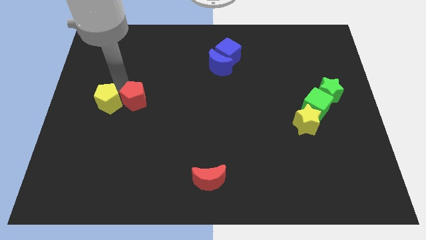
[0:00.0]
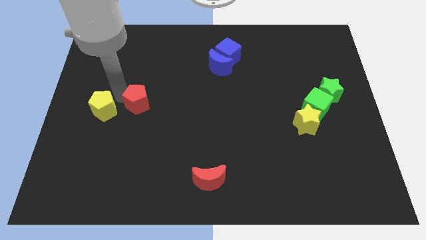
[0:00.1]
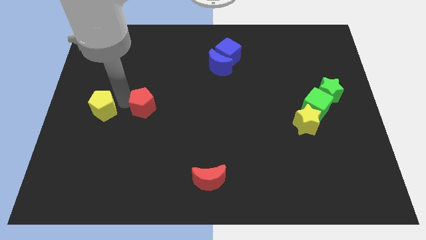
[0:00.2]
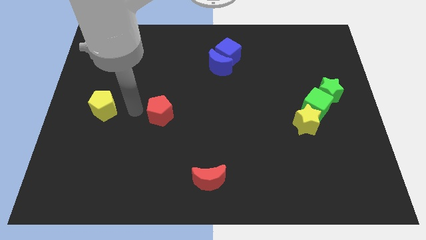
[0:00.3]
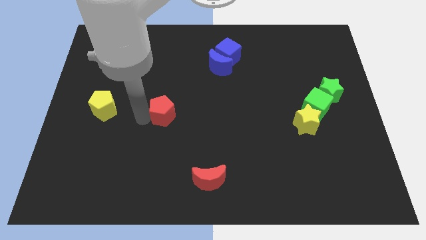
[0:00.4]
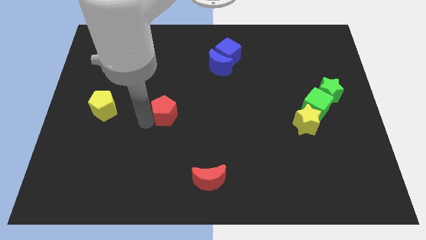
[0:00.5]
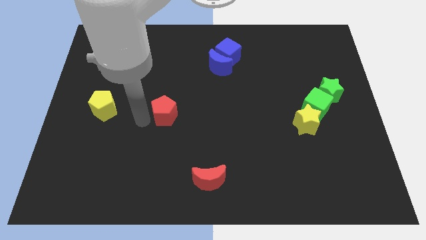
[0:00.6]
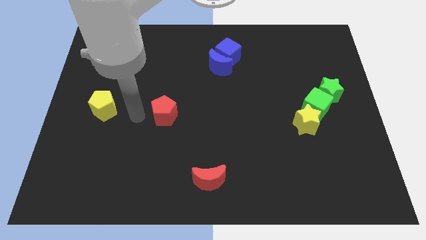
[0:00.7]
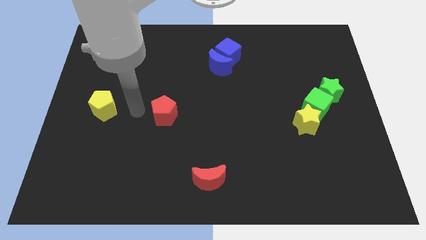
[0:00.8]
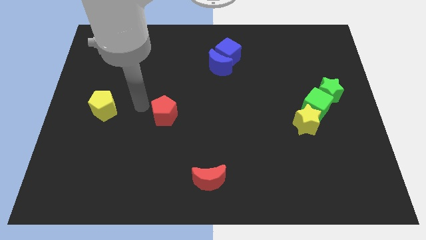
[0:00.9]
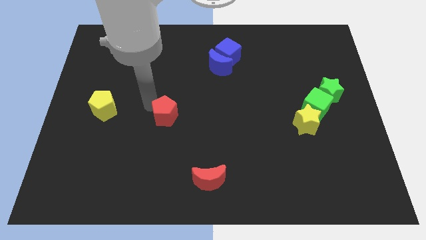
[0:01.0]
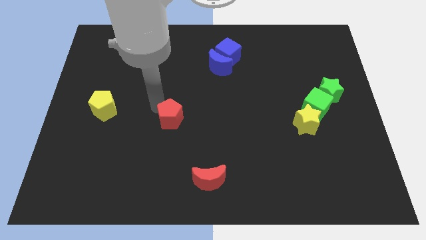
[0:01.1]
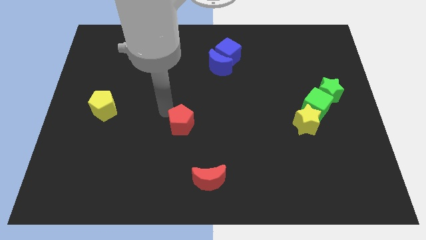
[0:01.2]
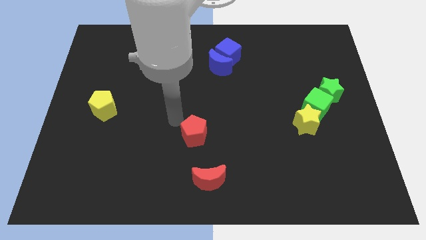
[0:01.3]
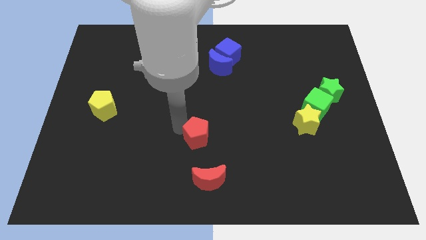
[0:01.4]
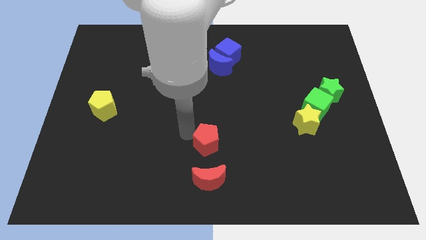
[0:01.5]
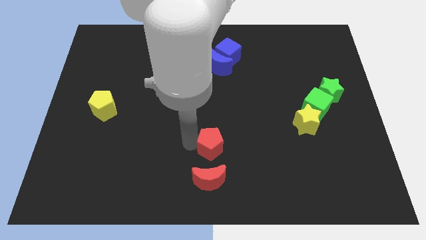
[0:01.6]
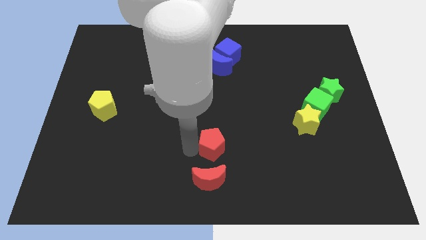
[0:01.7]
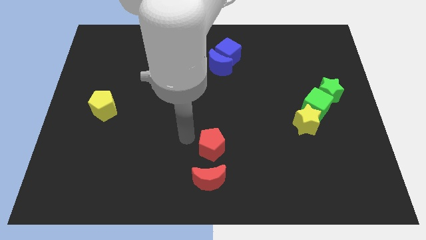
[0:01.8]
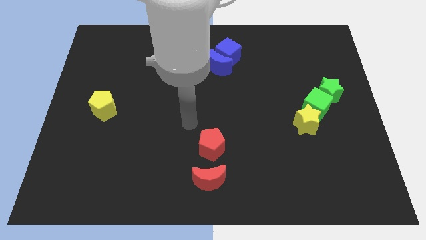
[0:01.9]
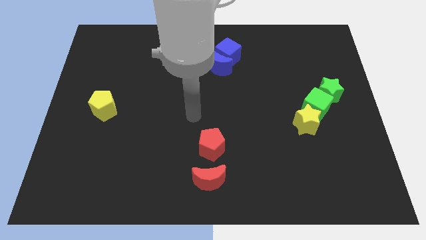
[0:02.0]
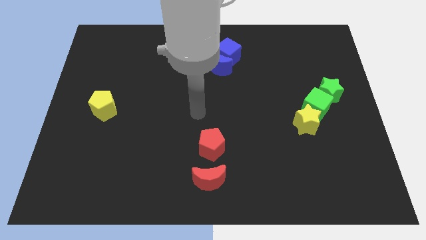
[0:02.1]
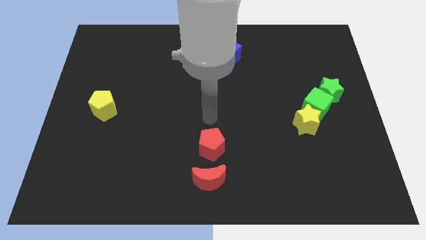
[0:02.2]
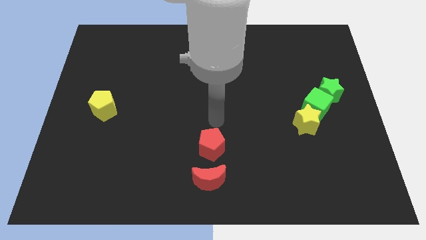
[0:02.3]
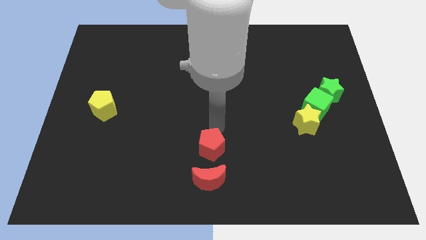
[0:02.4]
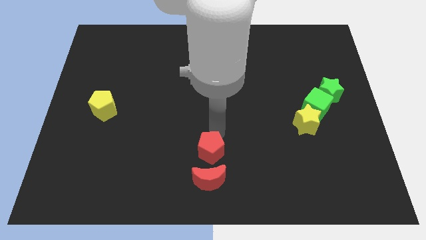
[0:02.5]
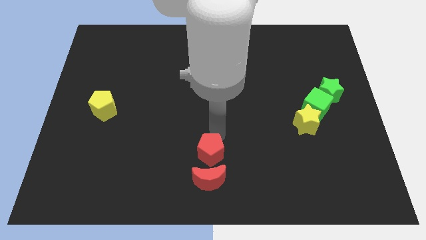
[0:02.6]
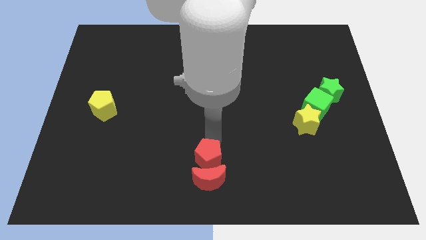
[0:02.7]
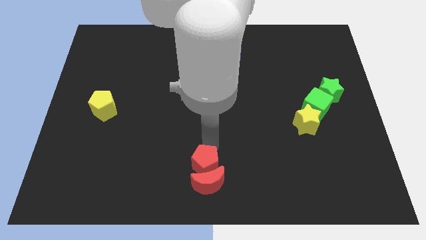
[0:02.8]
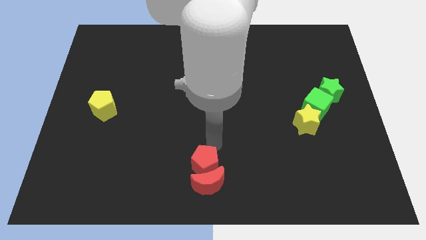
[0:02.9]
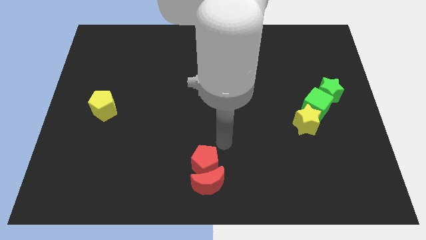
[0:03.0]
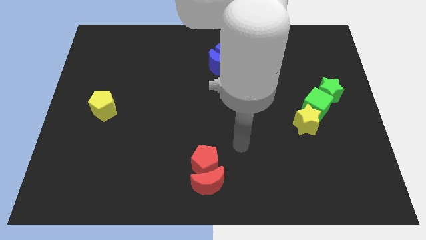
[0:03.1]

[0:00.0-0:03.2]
push the red pentagon to the red crescent

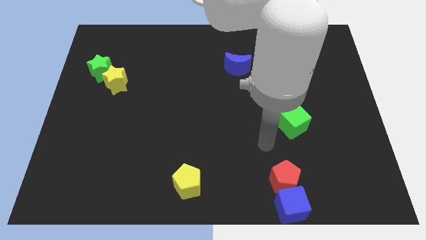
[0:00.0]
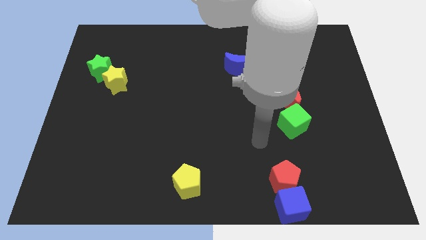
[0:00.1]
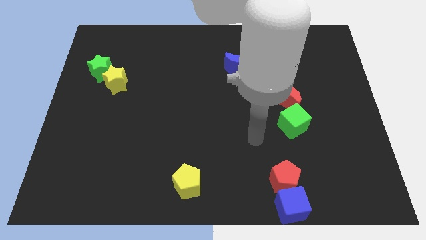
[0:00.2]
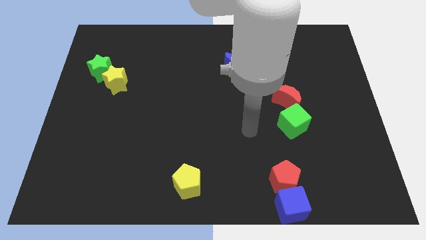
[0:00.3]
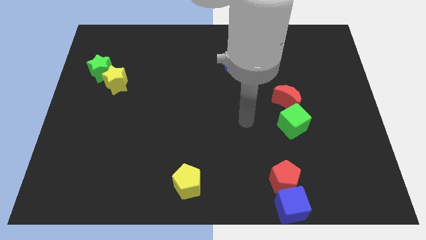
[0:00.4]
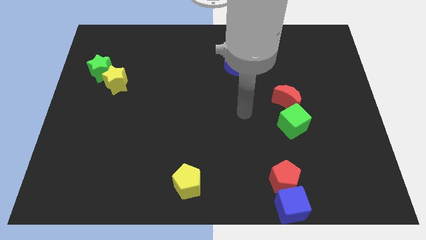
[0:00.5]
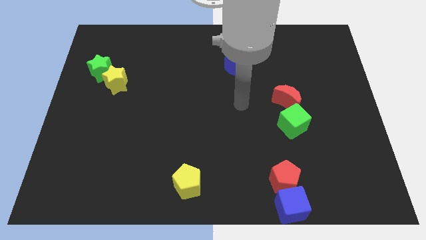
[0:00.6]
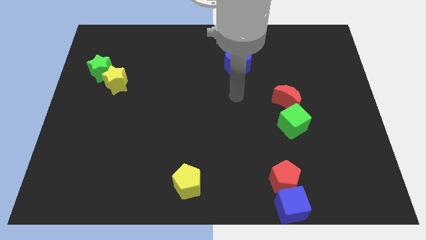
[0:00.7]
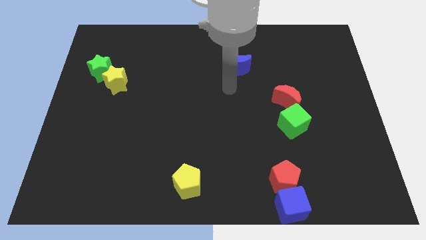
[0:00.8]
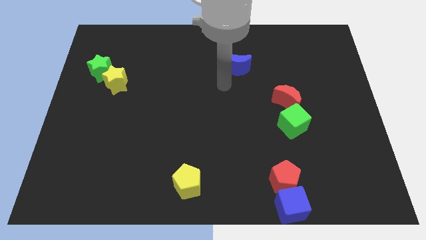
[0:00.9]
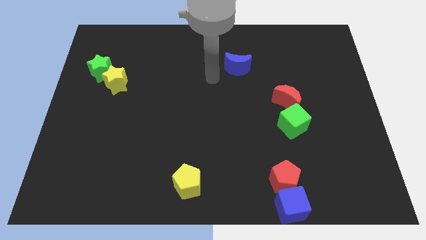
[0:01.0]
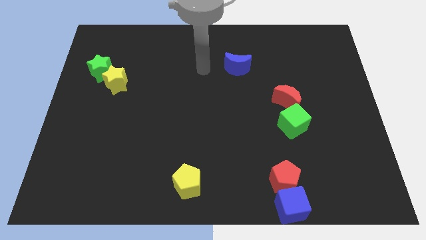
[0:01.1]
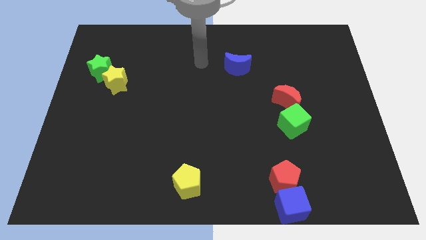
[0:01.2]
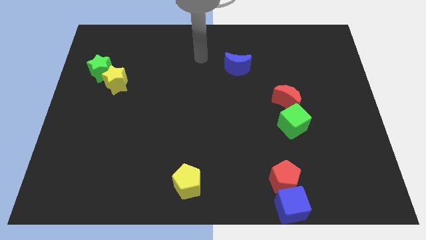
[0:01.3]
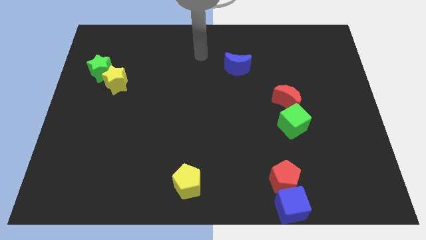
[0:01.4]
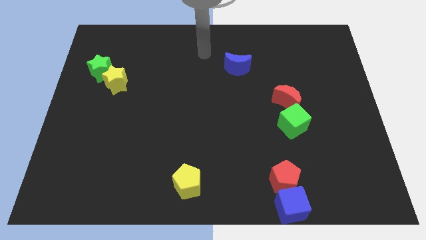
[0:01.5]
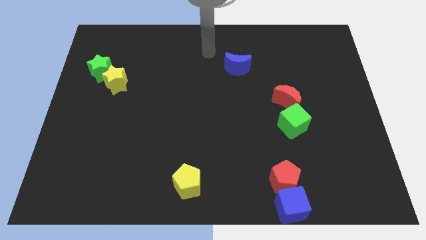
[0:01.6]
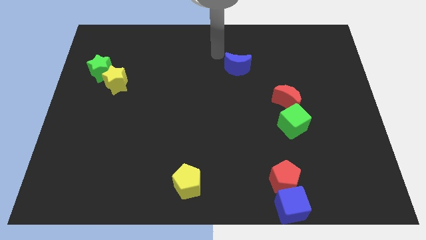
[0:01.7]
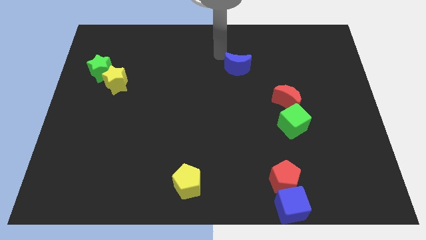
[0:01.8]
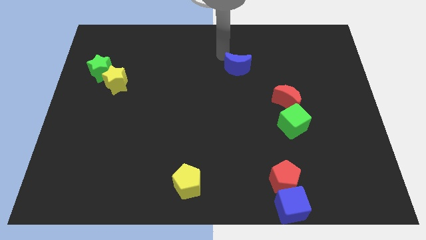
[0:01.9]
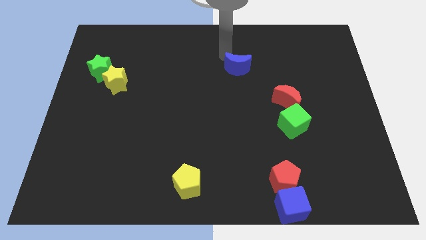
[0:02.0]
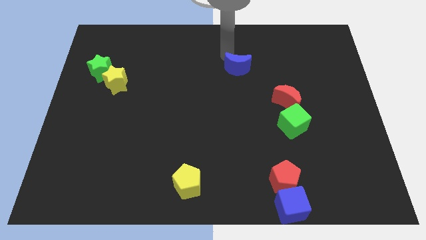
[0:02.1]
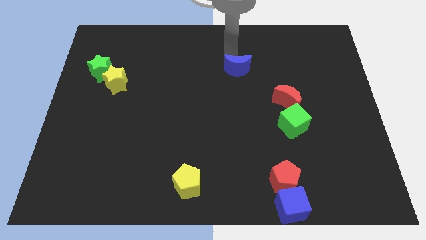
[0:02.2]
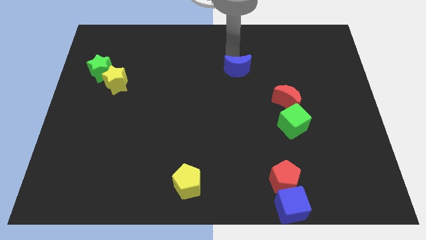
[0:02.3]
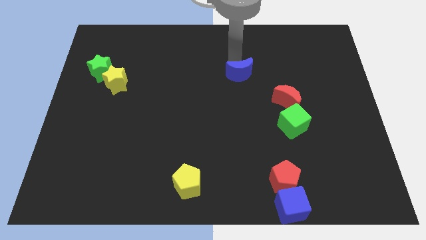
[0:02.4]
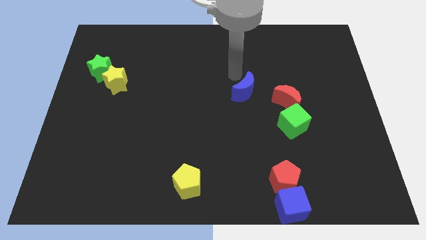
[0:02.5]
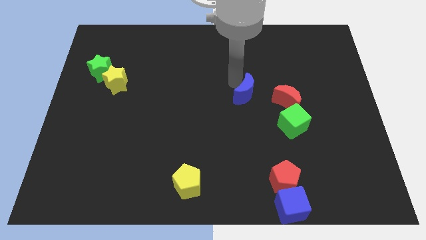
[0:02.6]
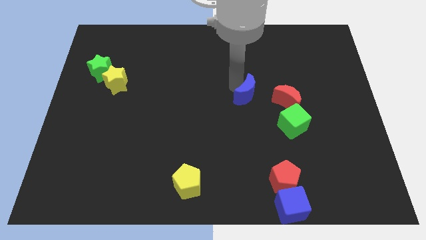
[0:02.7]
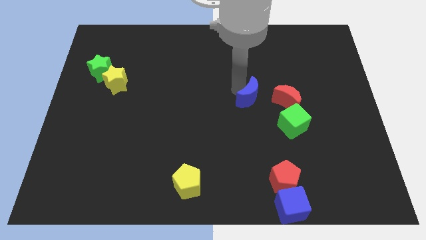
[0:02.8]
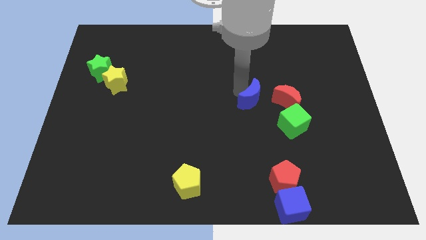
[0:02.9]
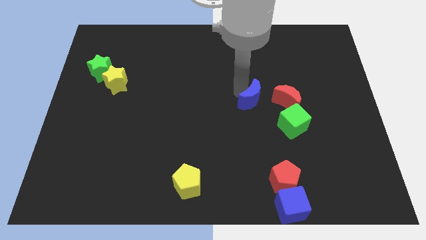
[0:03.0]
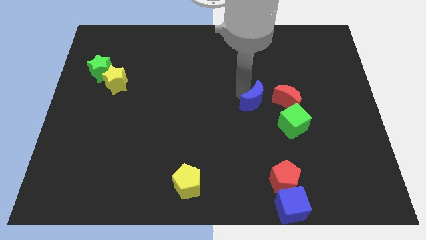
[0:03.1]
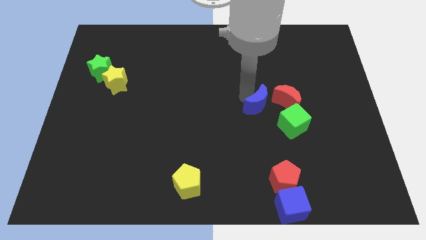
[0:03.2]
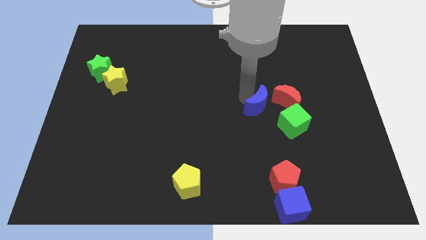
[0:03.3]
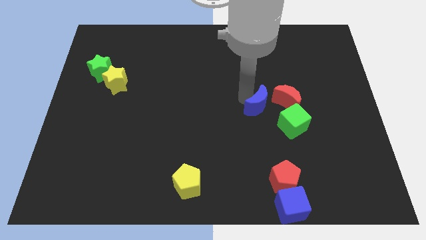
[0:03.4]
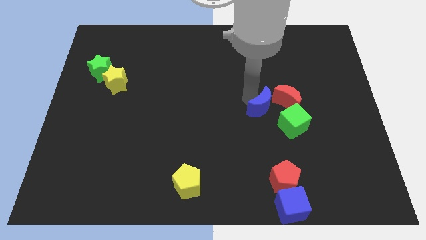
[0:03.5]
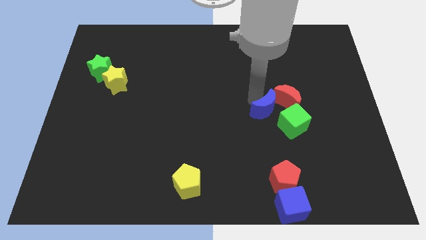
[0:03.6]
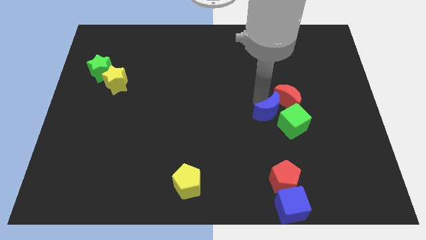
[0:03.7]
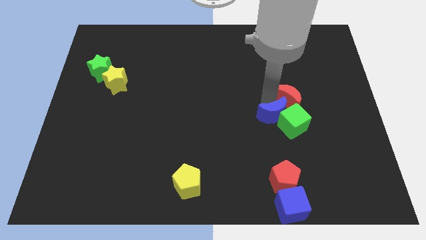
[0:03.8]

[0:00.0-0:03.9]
push the blue crescent into the group of blocks

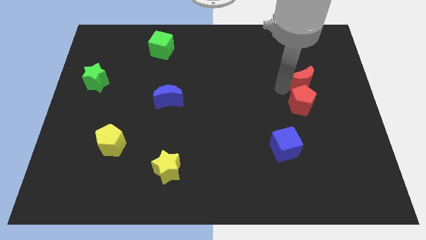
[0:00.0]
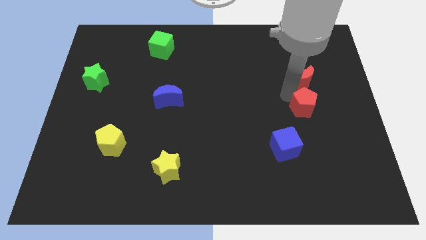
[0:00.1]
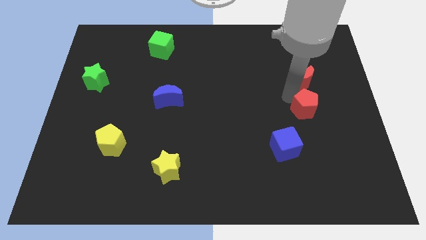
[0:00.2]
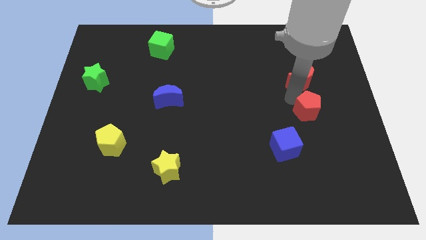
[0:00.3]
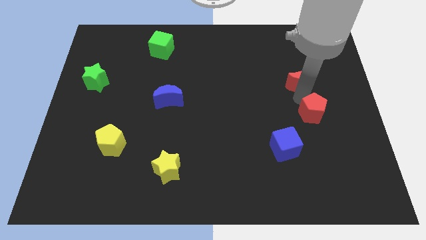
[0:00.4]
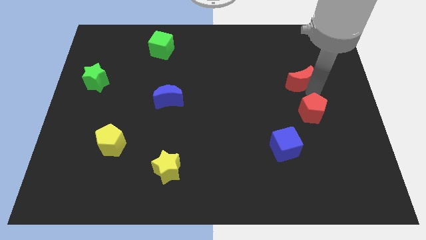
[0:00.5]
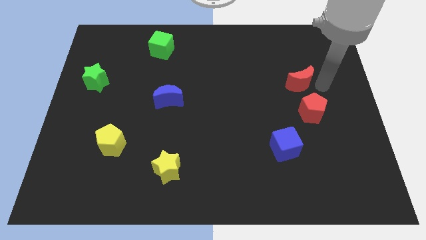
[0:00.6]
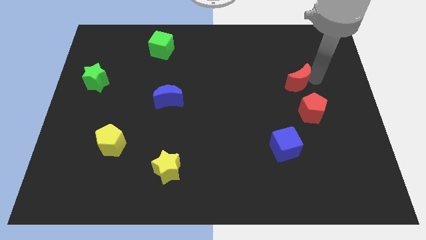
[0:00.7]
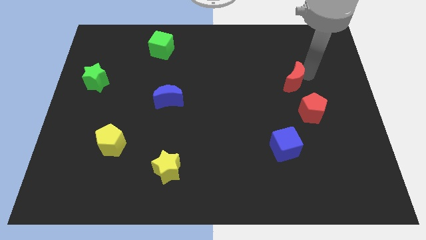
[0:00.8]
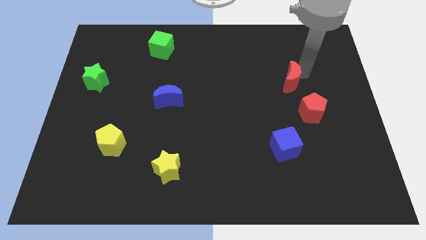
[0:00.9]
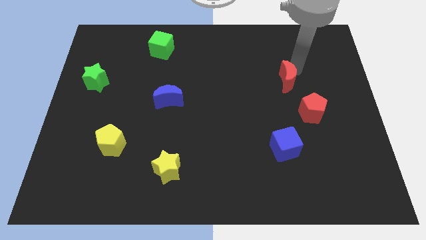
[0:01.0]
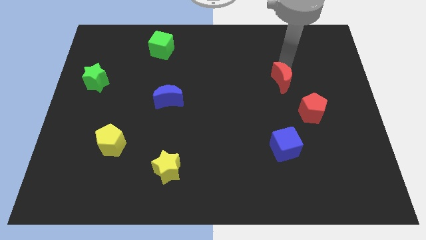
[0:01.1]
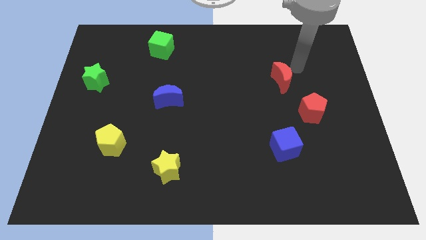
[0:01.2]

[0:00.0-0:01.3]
separate the red pentagon and the red moon

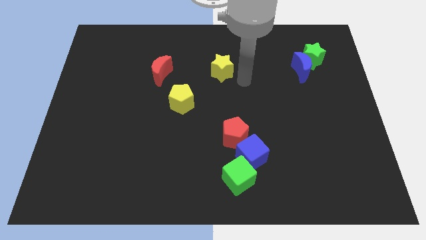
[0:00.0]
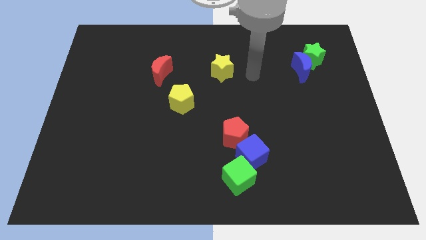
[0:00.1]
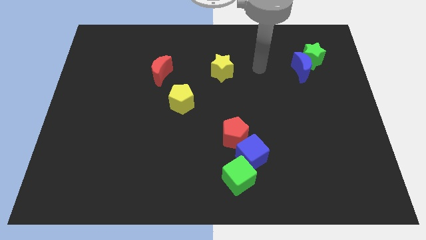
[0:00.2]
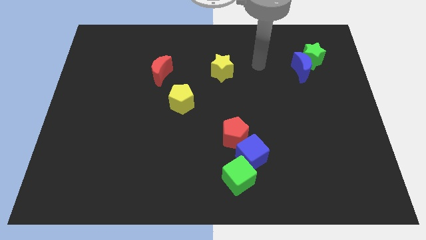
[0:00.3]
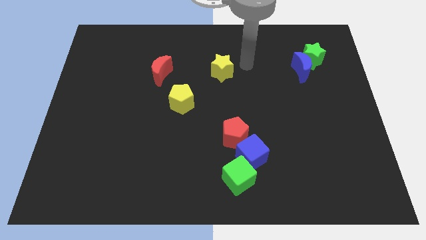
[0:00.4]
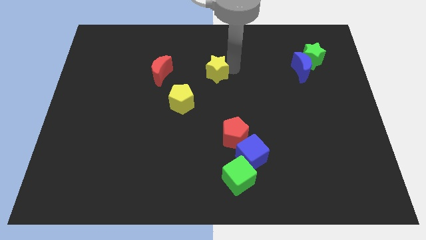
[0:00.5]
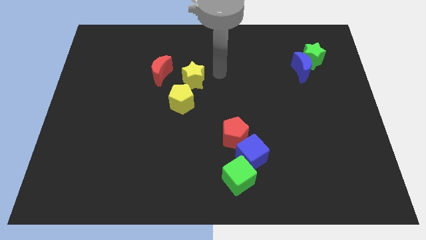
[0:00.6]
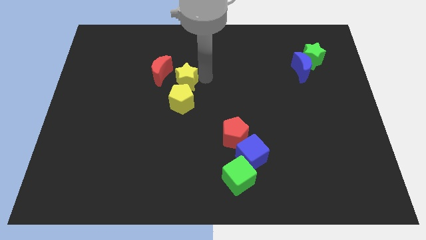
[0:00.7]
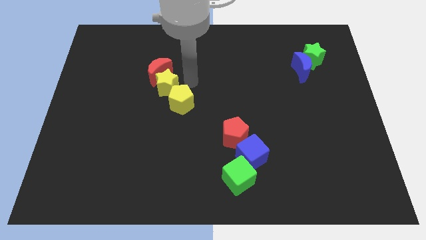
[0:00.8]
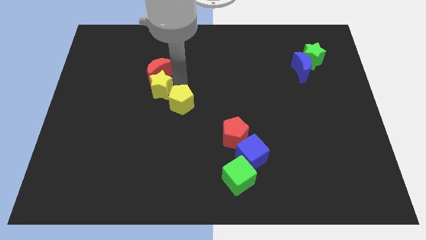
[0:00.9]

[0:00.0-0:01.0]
place the yellow star in between the red moon and yellow pentagon
